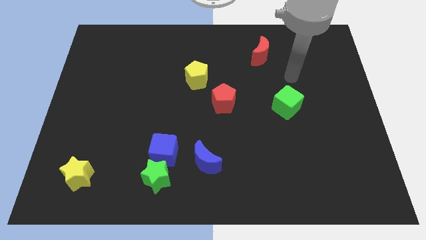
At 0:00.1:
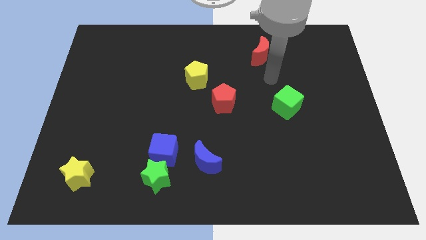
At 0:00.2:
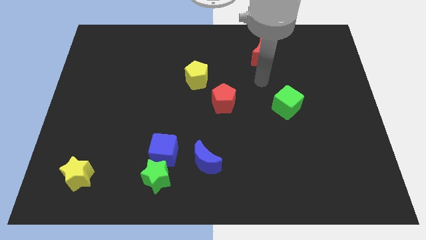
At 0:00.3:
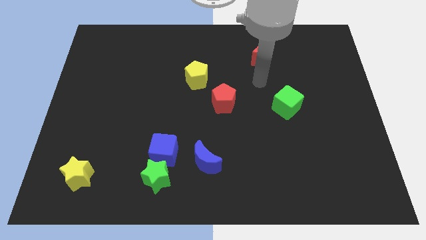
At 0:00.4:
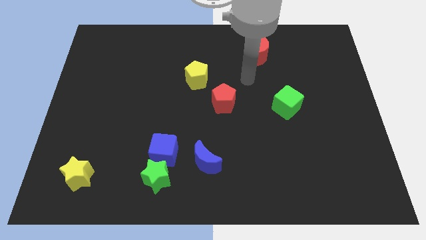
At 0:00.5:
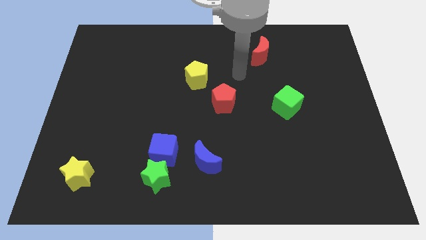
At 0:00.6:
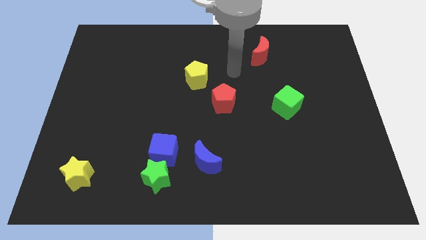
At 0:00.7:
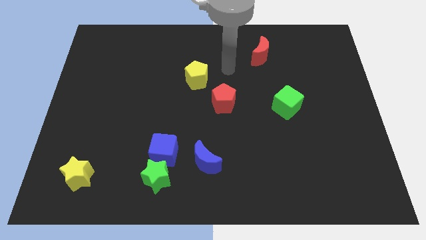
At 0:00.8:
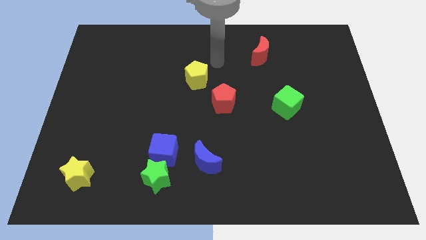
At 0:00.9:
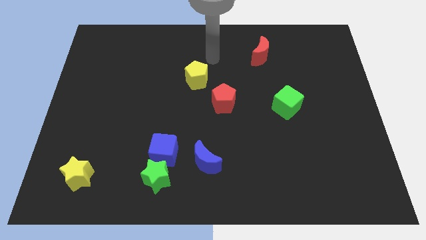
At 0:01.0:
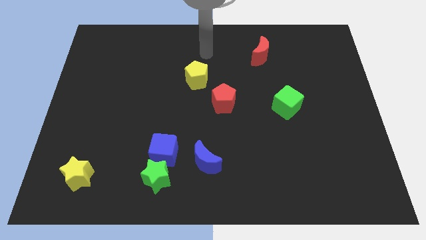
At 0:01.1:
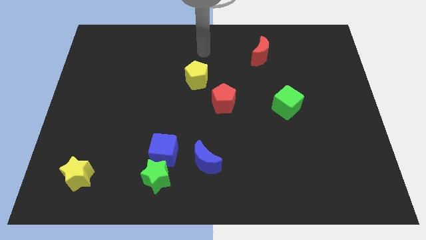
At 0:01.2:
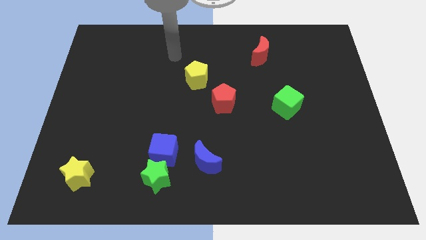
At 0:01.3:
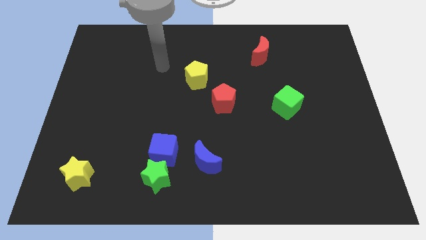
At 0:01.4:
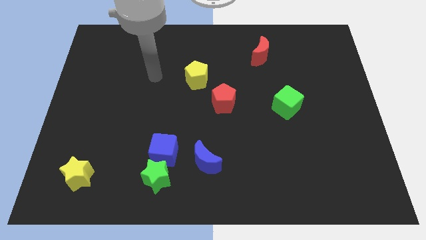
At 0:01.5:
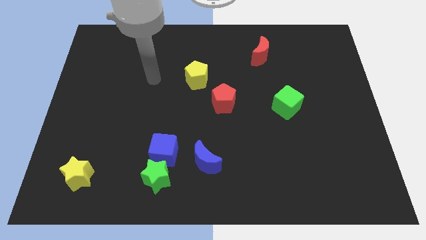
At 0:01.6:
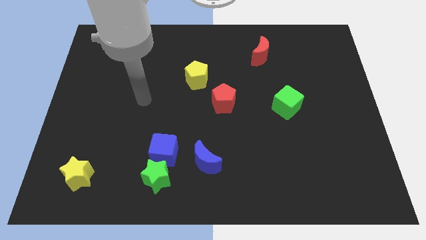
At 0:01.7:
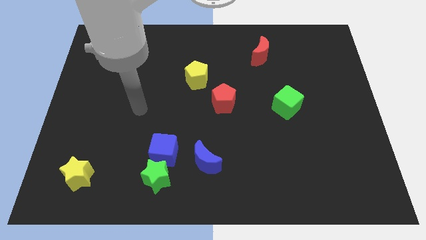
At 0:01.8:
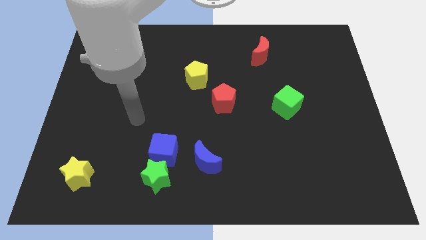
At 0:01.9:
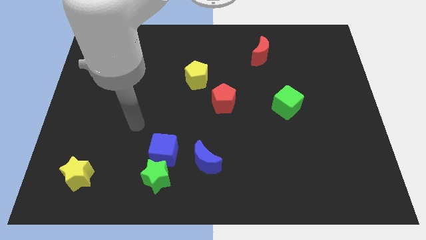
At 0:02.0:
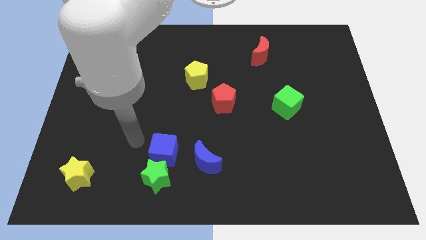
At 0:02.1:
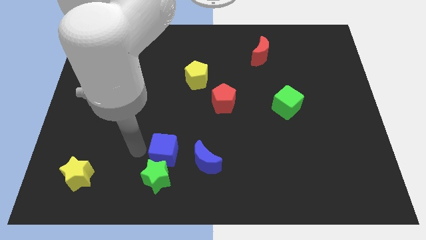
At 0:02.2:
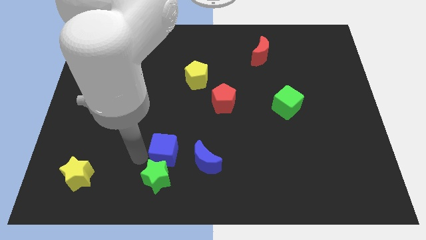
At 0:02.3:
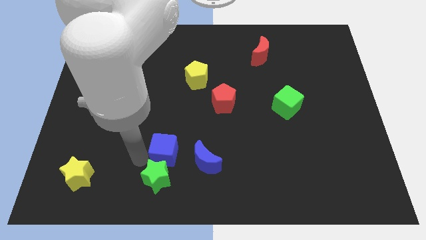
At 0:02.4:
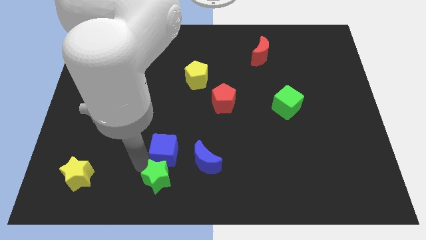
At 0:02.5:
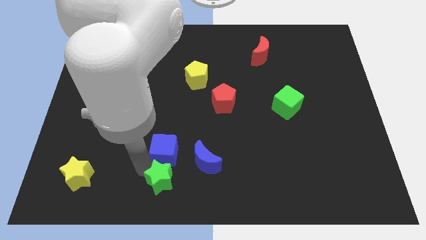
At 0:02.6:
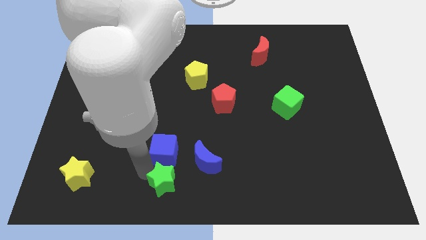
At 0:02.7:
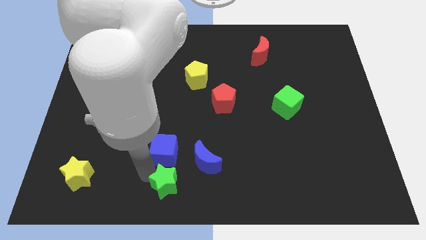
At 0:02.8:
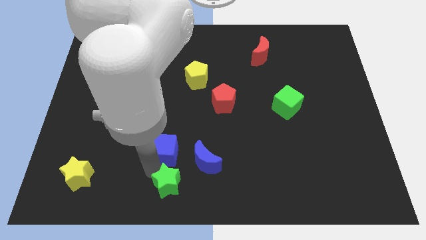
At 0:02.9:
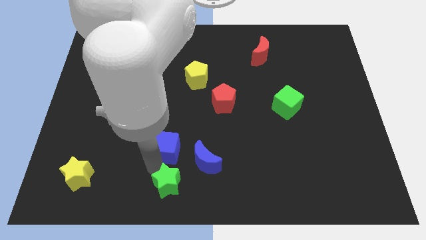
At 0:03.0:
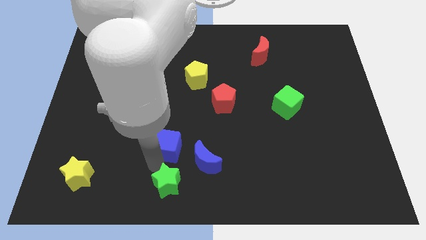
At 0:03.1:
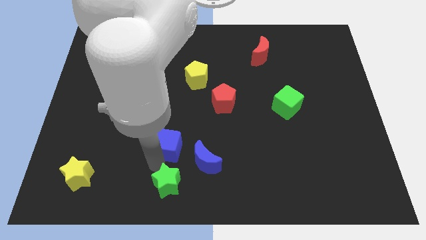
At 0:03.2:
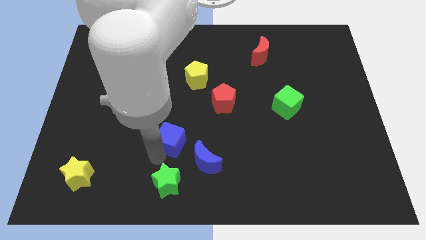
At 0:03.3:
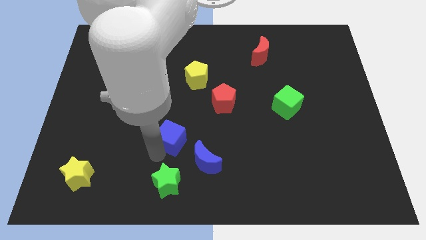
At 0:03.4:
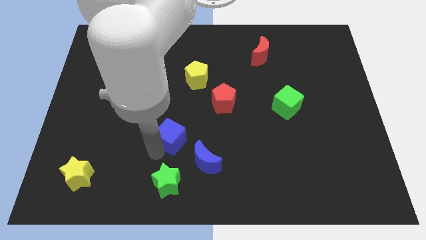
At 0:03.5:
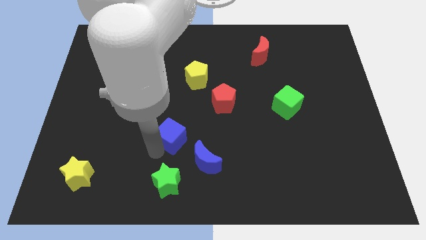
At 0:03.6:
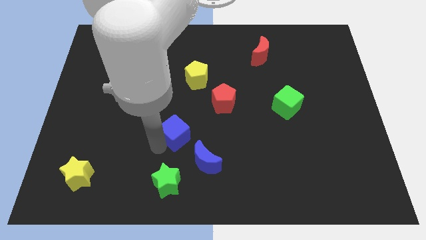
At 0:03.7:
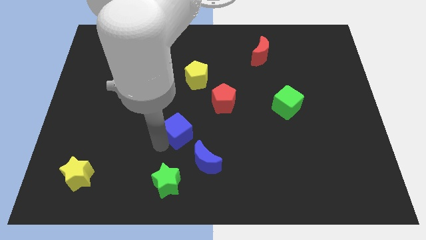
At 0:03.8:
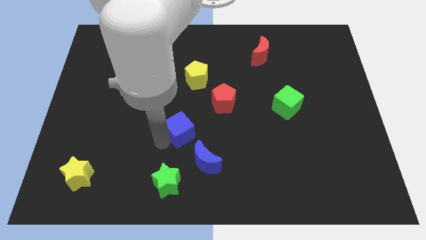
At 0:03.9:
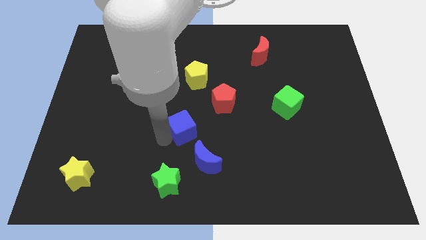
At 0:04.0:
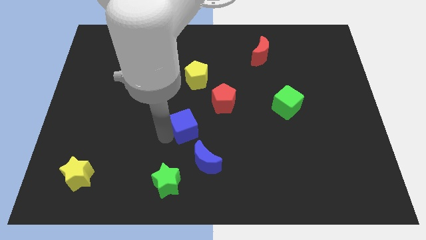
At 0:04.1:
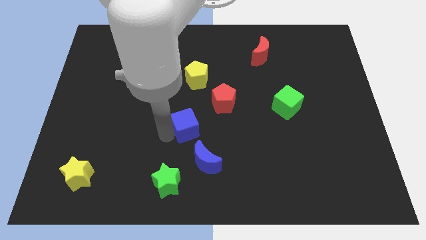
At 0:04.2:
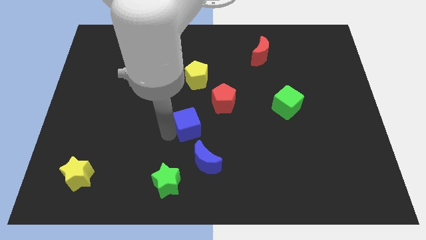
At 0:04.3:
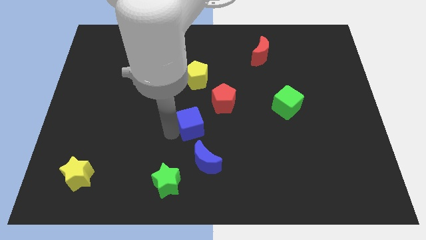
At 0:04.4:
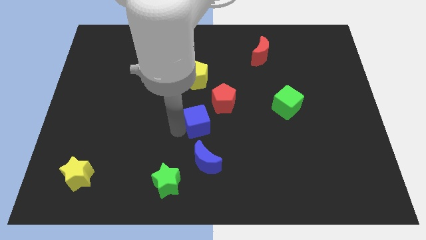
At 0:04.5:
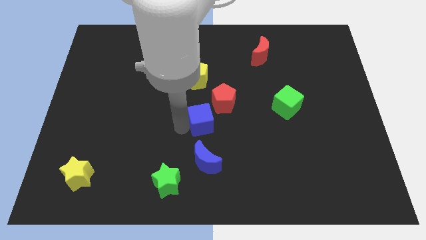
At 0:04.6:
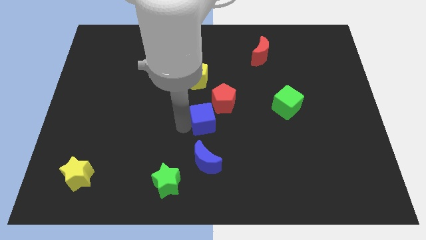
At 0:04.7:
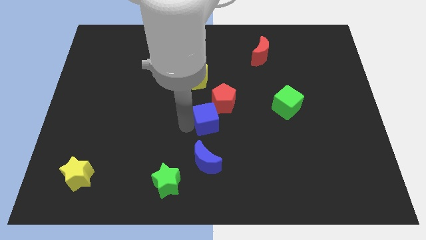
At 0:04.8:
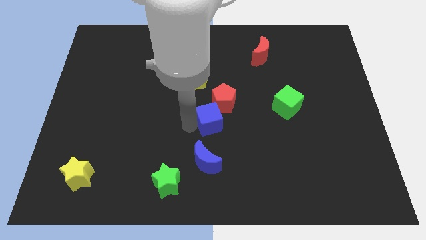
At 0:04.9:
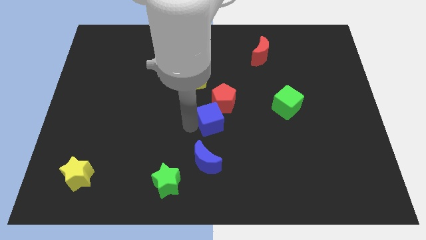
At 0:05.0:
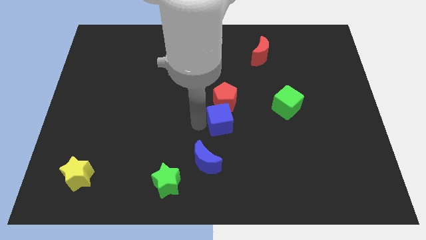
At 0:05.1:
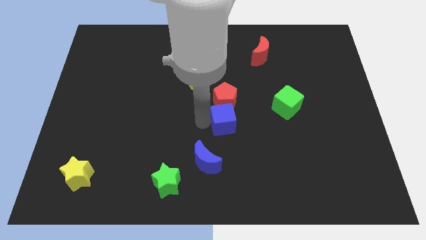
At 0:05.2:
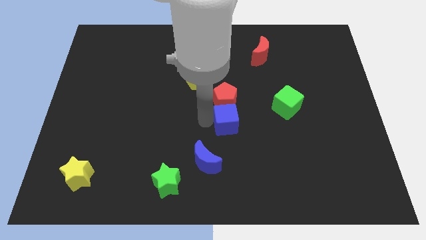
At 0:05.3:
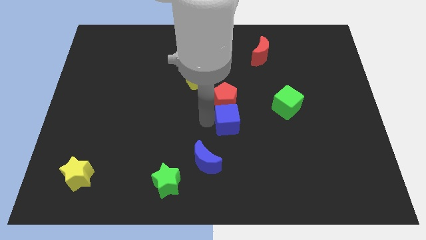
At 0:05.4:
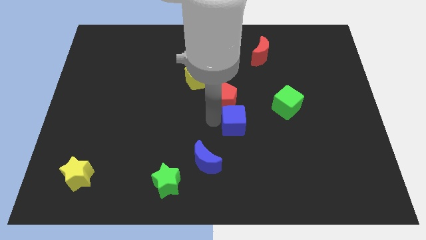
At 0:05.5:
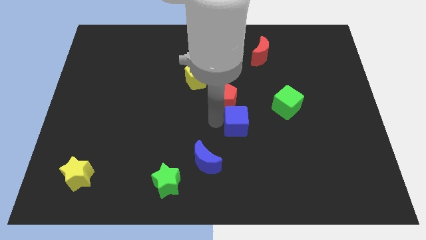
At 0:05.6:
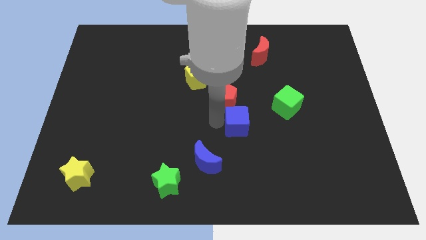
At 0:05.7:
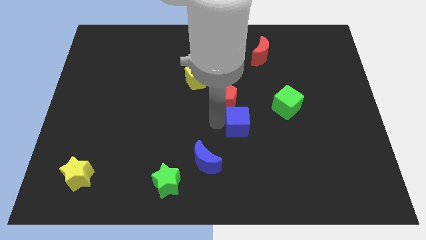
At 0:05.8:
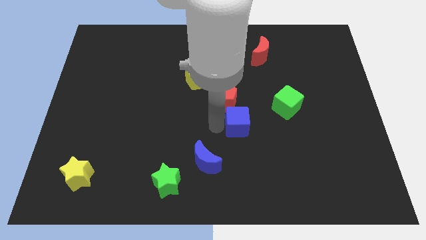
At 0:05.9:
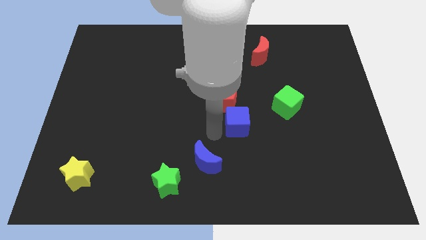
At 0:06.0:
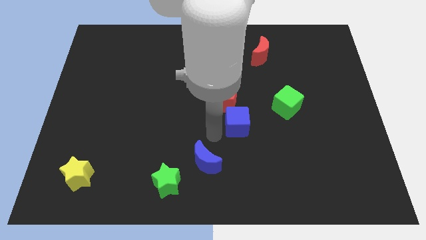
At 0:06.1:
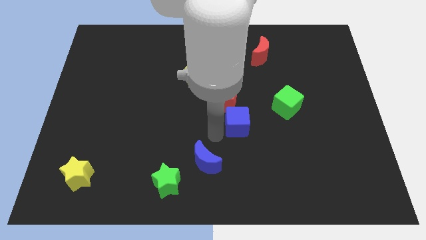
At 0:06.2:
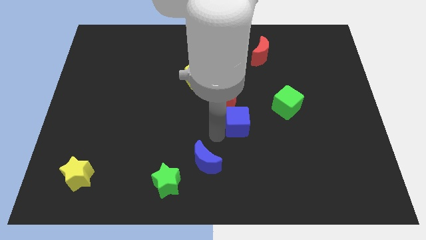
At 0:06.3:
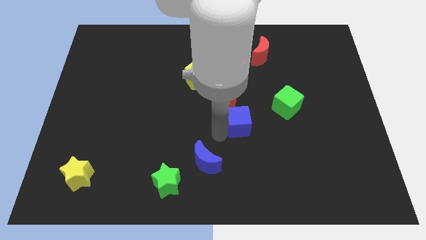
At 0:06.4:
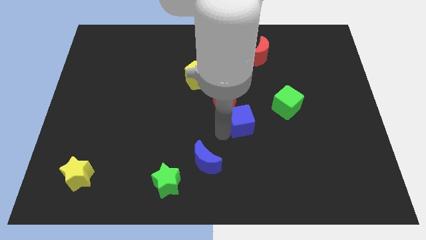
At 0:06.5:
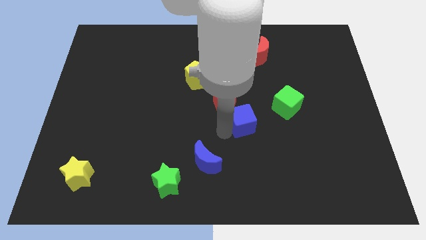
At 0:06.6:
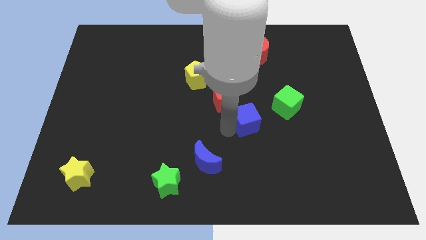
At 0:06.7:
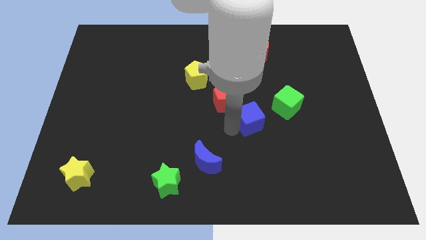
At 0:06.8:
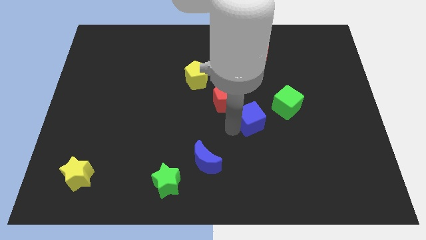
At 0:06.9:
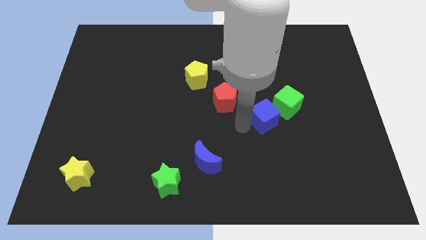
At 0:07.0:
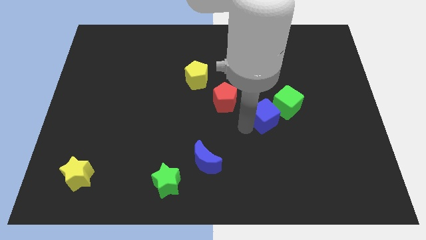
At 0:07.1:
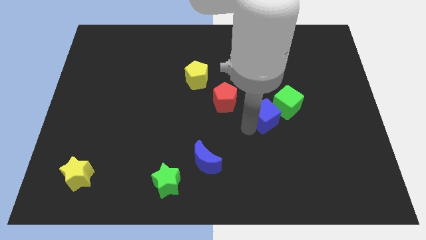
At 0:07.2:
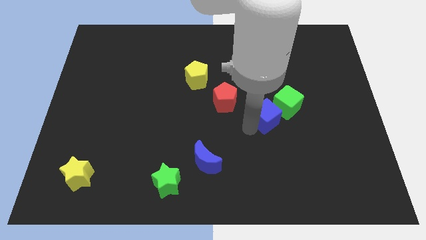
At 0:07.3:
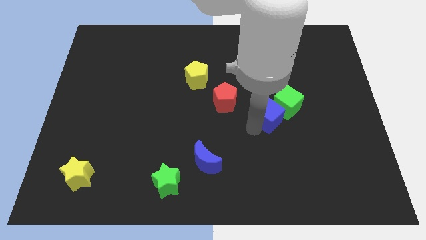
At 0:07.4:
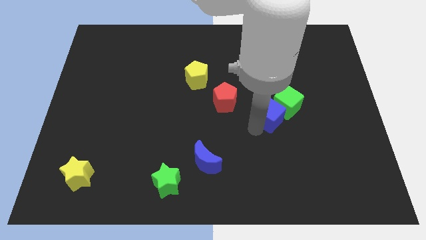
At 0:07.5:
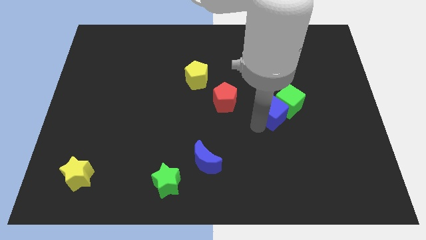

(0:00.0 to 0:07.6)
push the blue cube to the green cube

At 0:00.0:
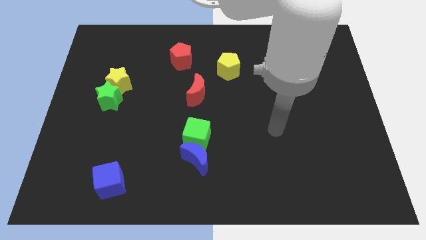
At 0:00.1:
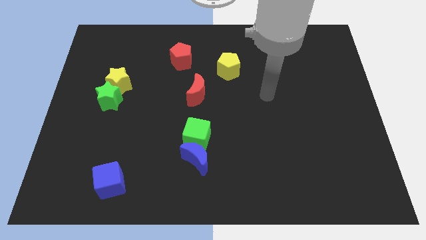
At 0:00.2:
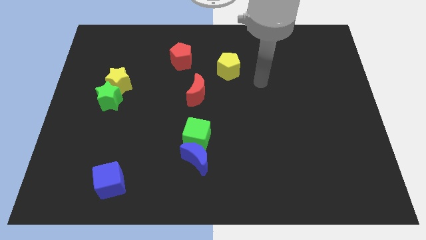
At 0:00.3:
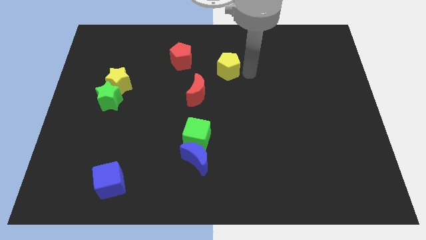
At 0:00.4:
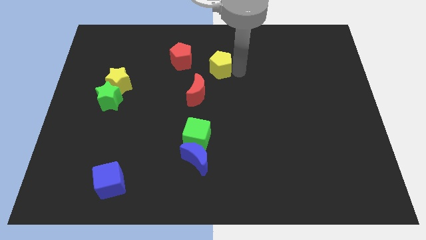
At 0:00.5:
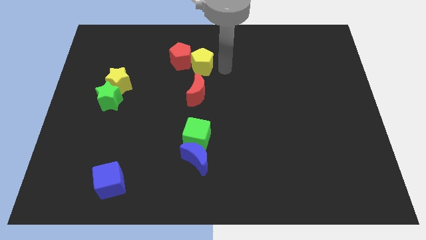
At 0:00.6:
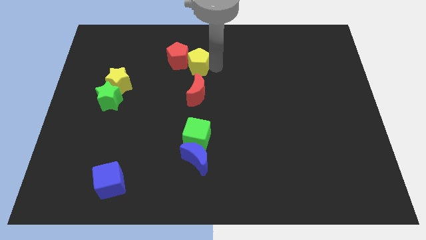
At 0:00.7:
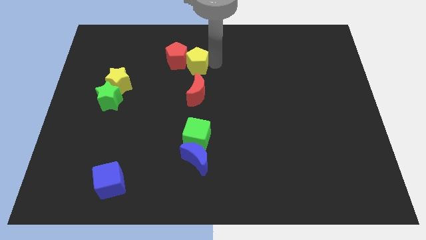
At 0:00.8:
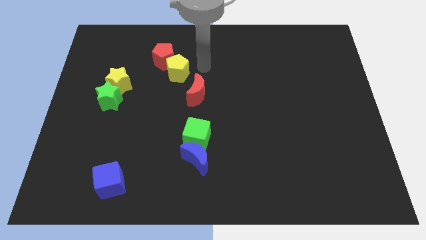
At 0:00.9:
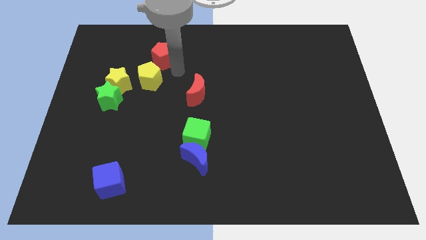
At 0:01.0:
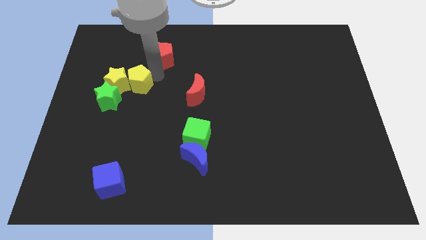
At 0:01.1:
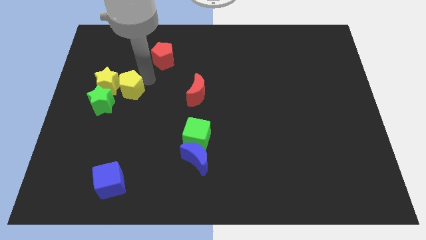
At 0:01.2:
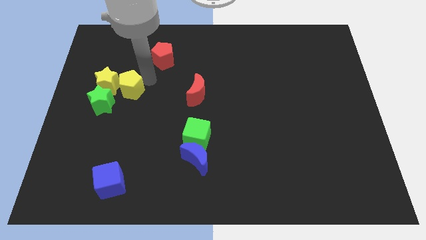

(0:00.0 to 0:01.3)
put the yellow pentagon next to the yellow star
